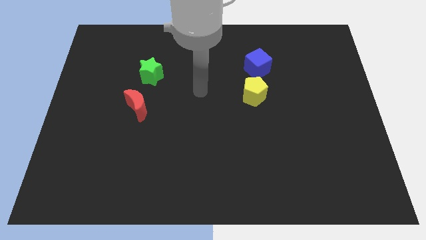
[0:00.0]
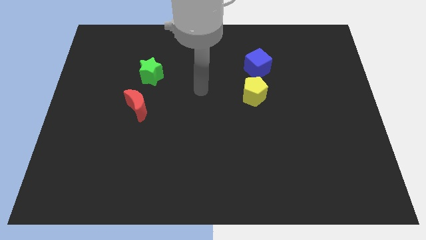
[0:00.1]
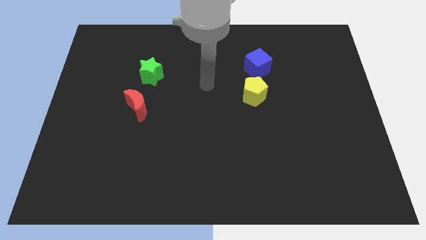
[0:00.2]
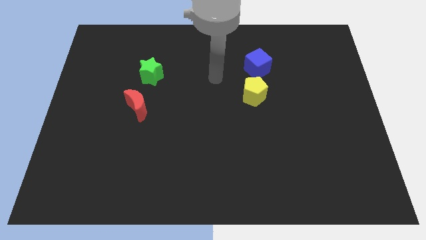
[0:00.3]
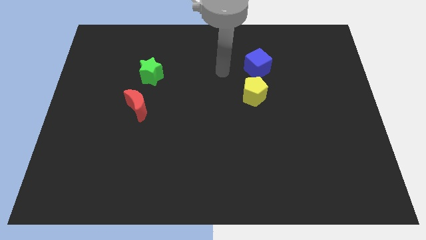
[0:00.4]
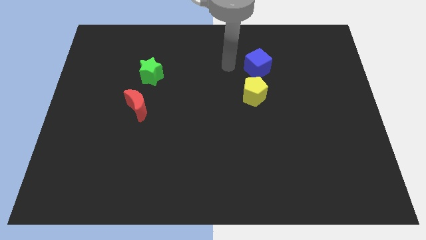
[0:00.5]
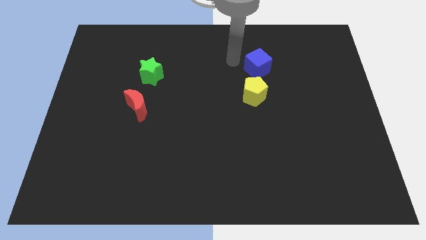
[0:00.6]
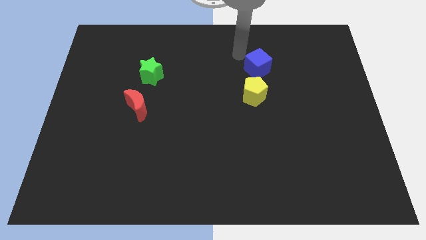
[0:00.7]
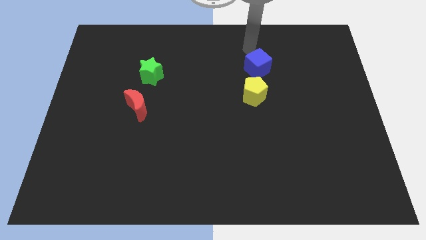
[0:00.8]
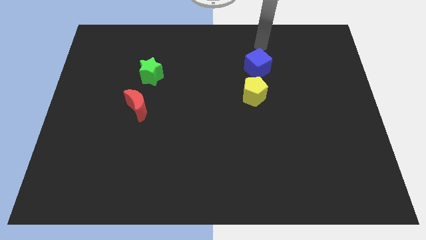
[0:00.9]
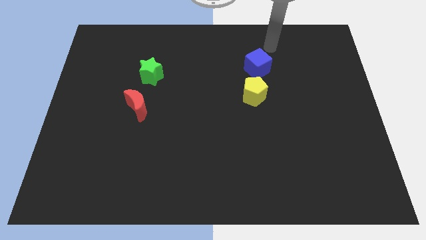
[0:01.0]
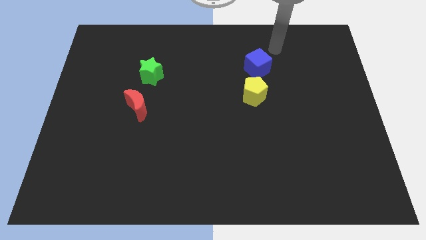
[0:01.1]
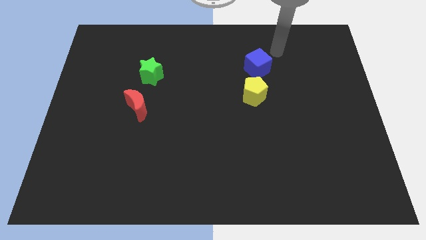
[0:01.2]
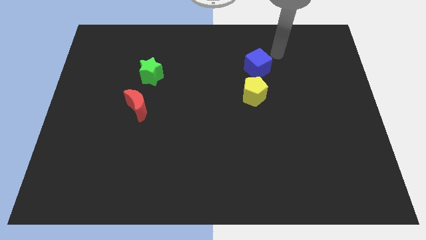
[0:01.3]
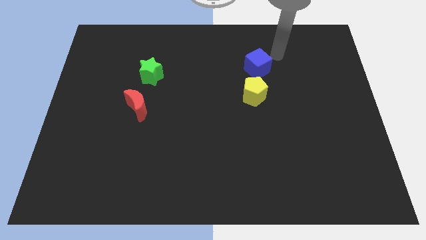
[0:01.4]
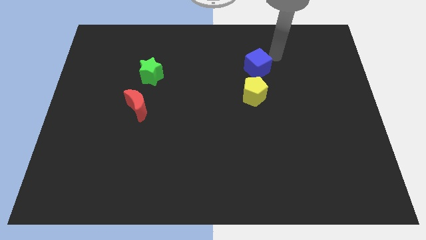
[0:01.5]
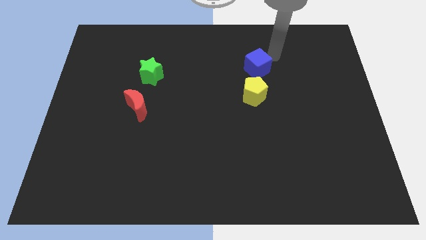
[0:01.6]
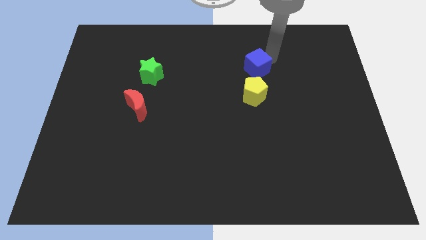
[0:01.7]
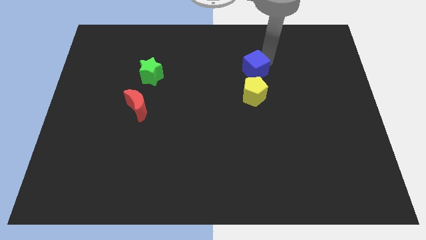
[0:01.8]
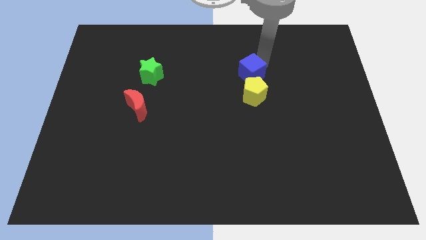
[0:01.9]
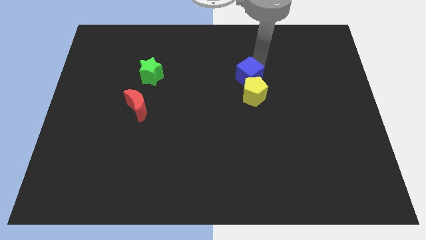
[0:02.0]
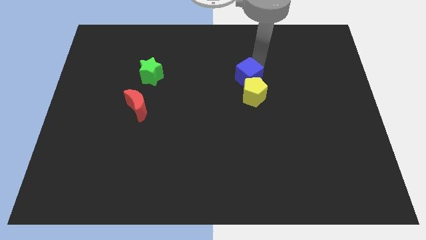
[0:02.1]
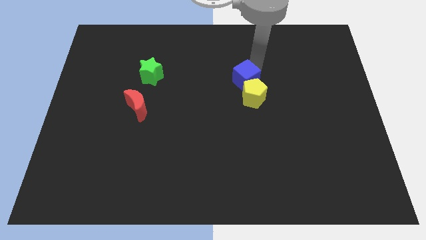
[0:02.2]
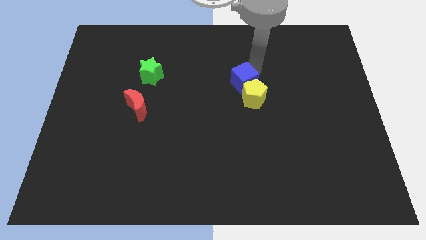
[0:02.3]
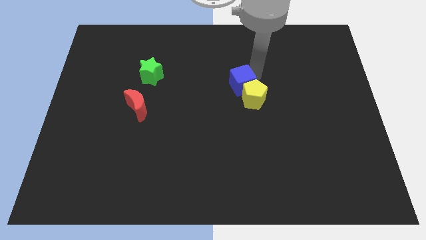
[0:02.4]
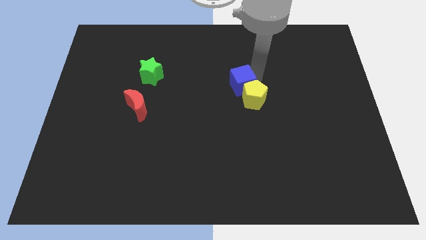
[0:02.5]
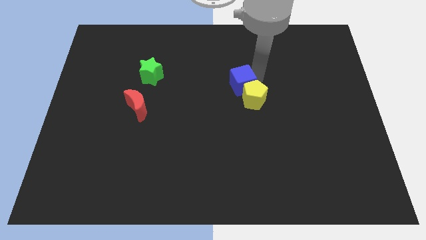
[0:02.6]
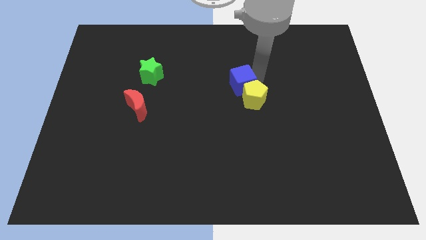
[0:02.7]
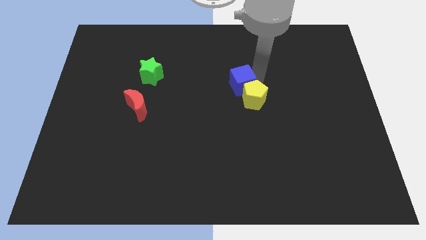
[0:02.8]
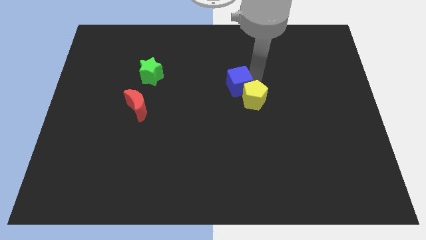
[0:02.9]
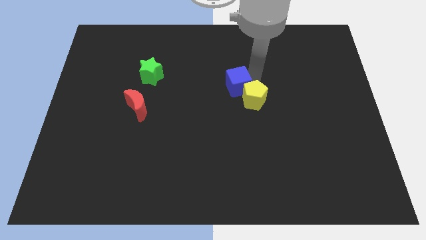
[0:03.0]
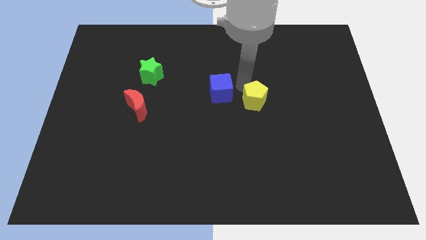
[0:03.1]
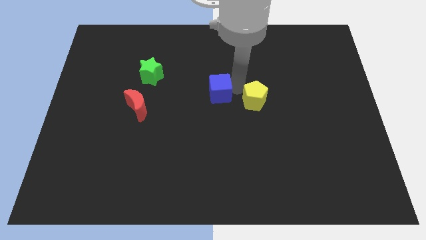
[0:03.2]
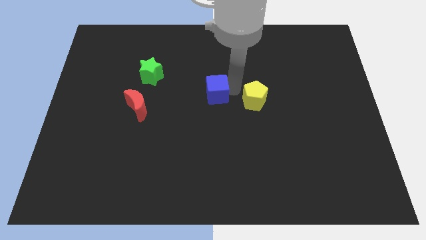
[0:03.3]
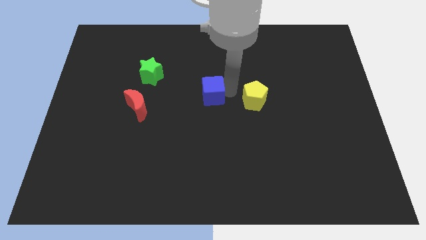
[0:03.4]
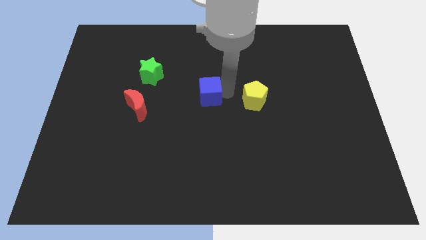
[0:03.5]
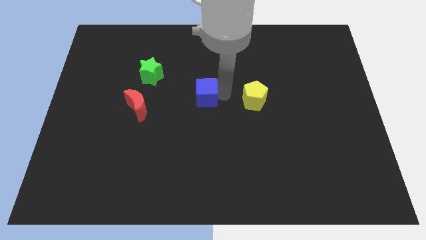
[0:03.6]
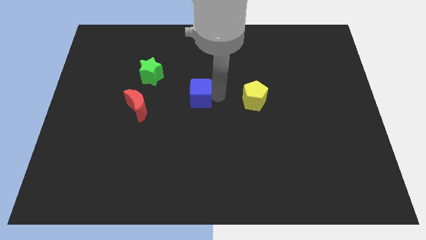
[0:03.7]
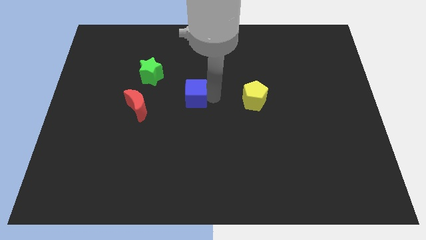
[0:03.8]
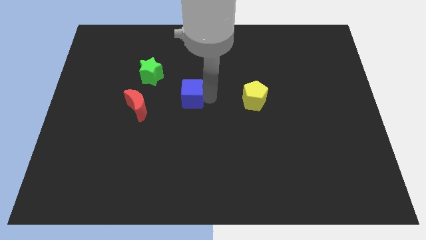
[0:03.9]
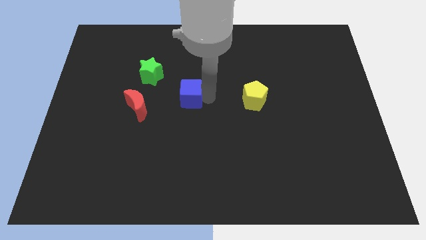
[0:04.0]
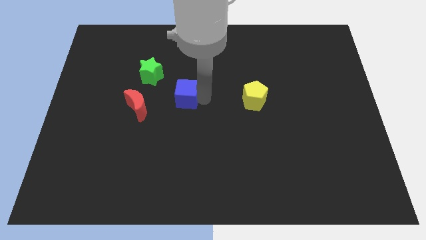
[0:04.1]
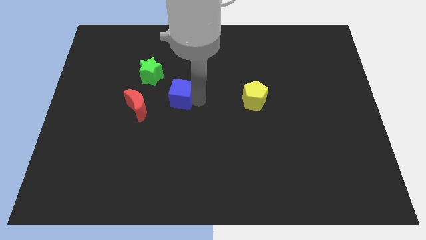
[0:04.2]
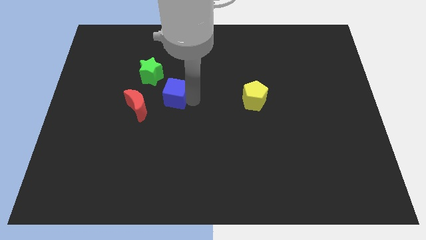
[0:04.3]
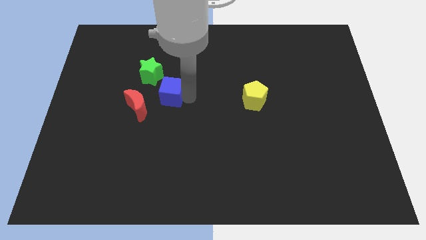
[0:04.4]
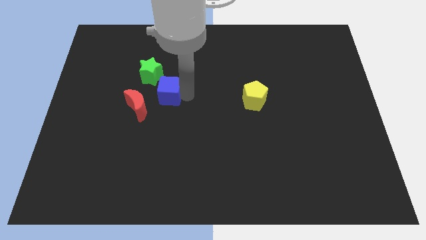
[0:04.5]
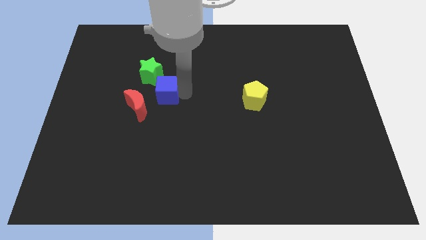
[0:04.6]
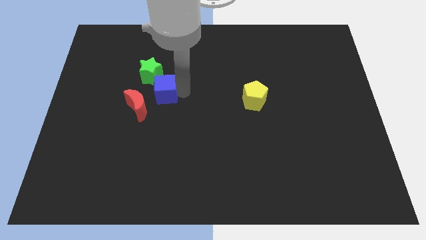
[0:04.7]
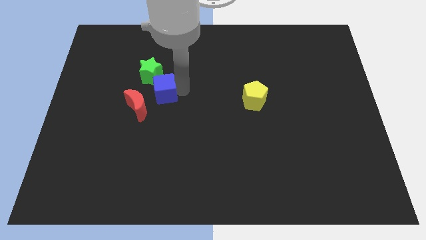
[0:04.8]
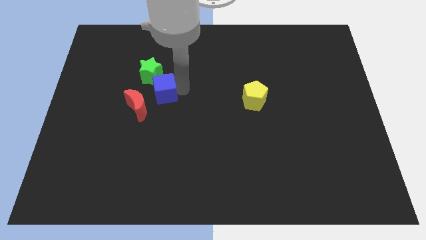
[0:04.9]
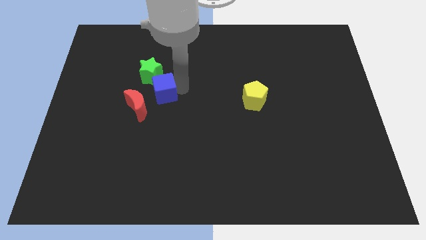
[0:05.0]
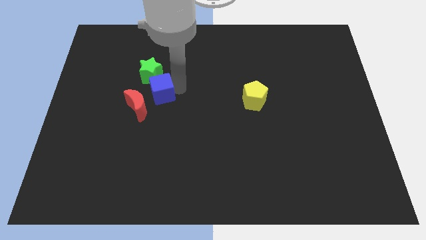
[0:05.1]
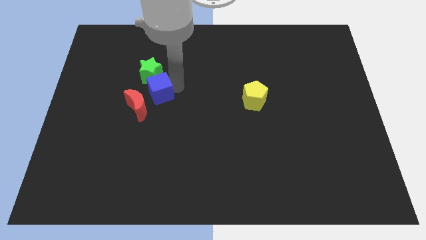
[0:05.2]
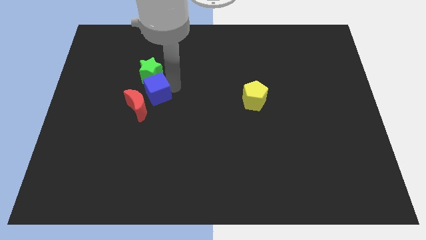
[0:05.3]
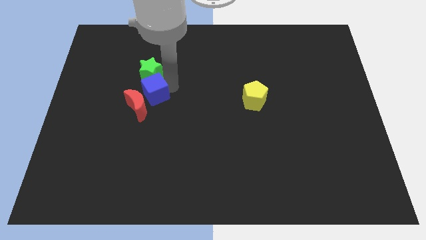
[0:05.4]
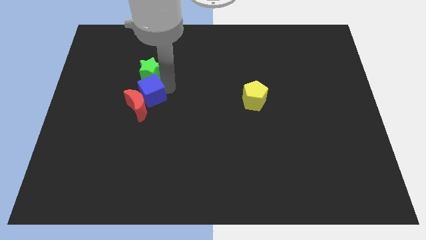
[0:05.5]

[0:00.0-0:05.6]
put the blue block next to the red moon

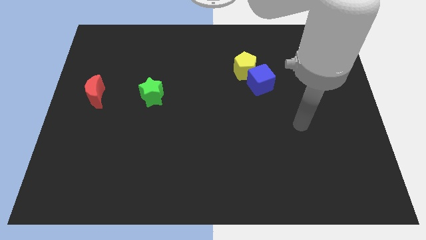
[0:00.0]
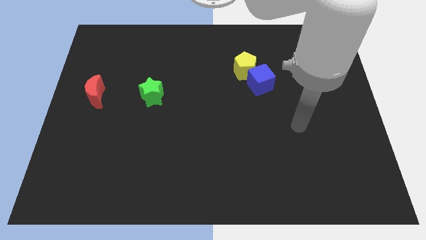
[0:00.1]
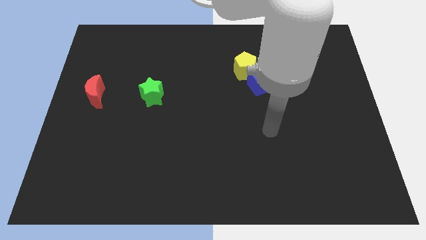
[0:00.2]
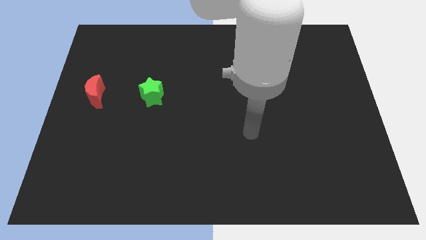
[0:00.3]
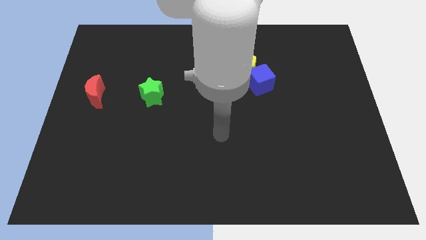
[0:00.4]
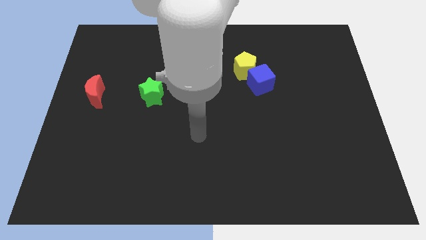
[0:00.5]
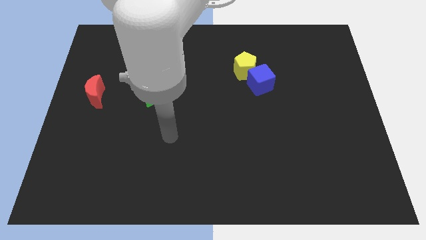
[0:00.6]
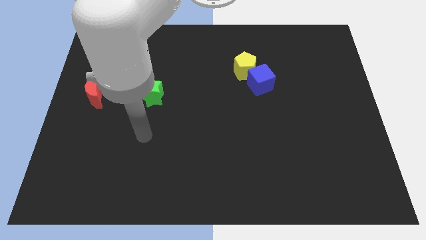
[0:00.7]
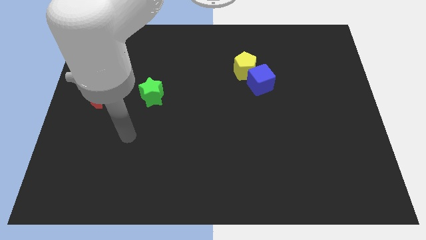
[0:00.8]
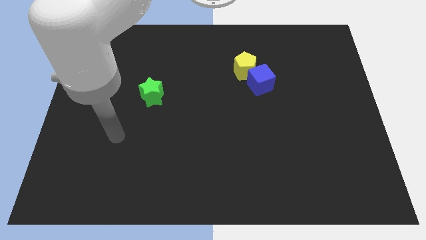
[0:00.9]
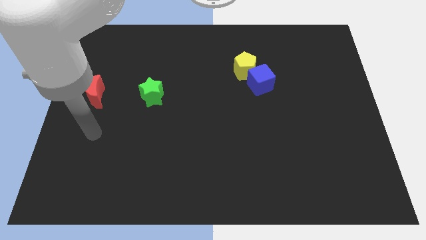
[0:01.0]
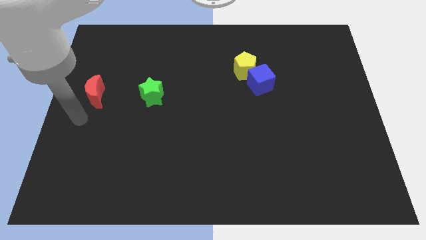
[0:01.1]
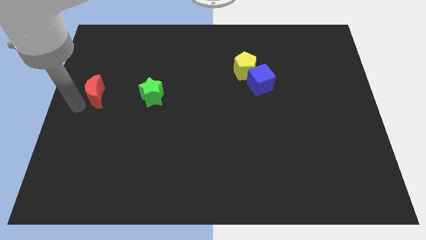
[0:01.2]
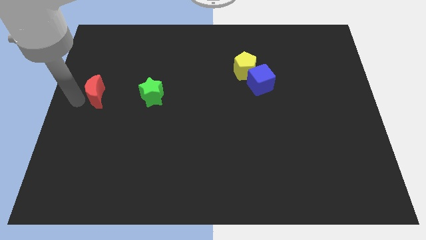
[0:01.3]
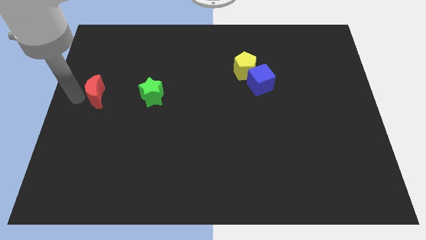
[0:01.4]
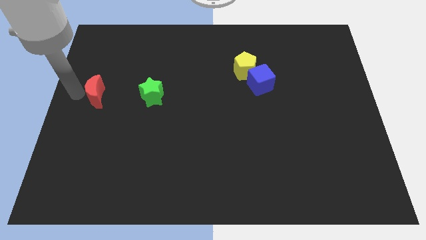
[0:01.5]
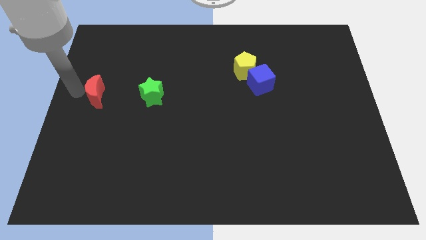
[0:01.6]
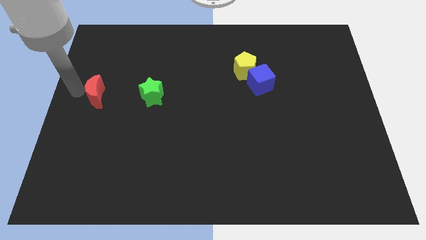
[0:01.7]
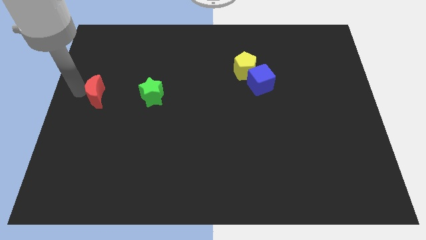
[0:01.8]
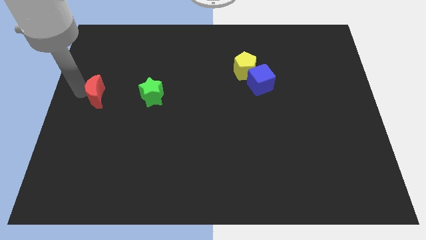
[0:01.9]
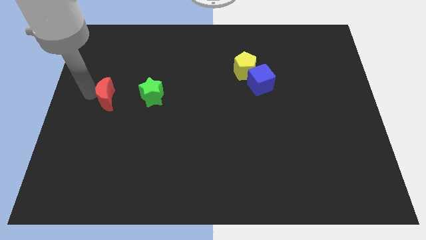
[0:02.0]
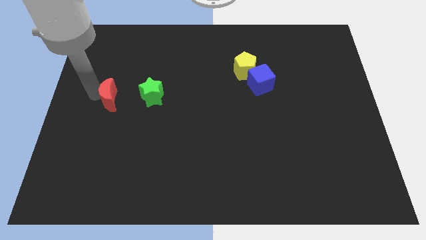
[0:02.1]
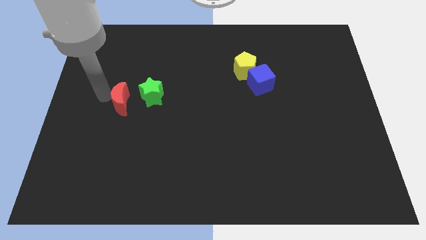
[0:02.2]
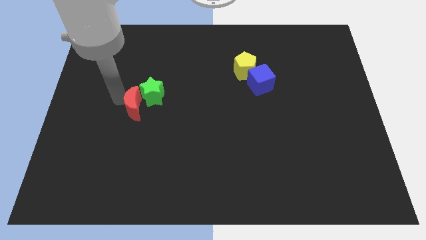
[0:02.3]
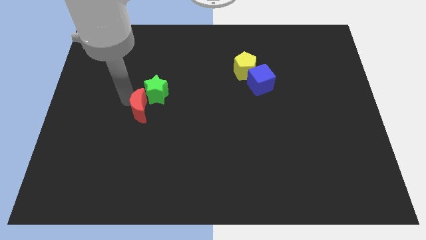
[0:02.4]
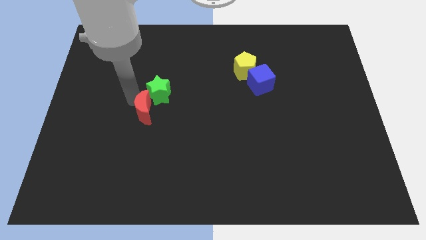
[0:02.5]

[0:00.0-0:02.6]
slide the moon close to the green star

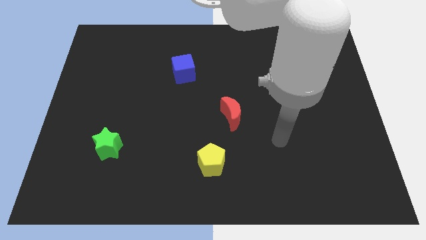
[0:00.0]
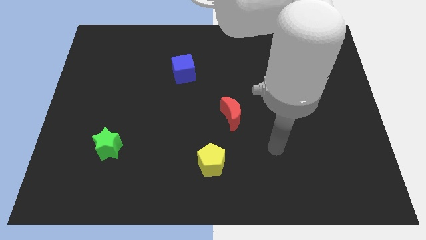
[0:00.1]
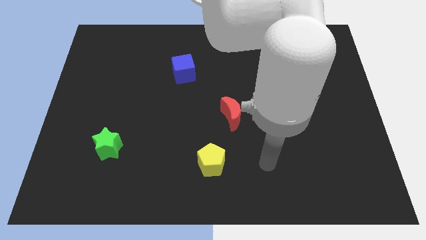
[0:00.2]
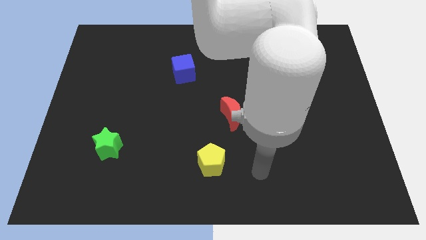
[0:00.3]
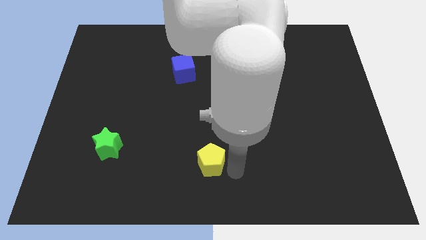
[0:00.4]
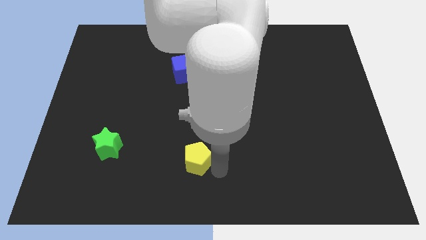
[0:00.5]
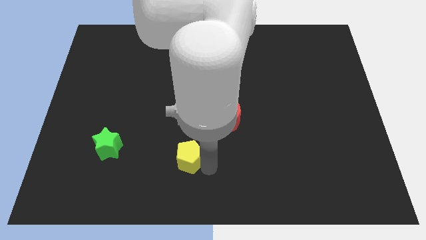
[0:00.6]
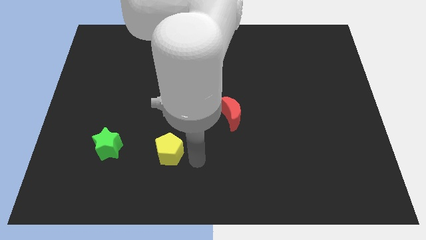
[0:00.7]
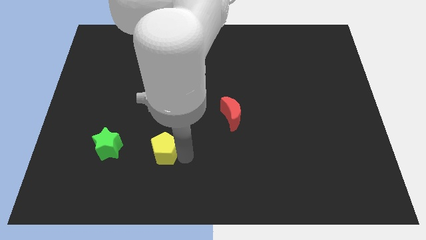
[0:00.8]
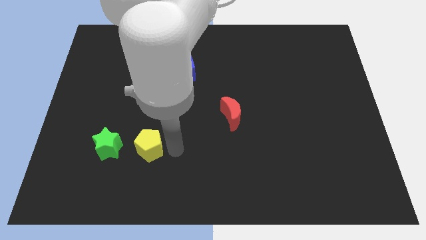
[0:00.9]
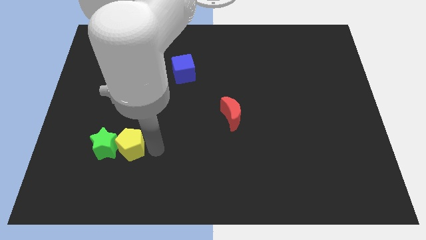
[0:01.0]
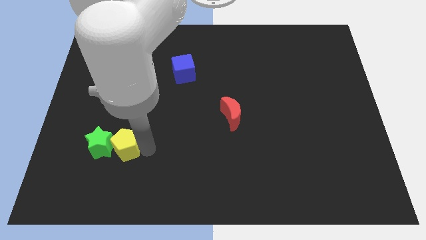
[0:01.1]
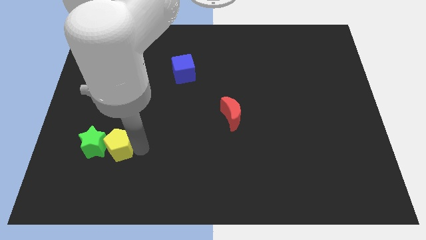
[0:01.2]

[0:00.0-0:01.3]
move the pentagon close to the green block
